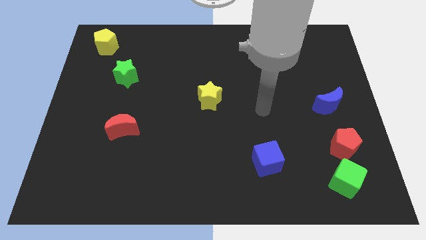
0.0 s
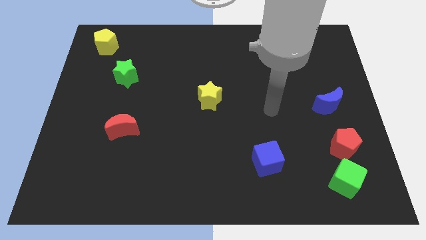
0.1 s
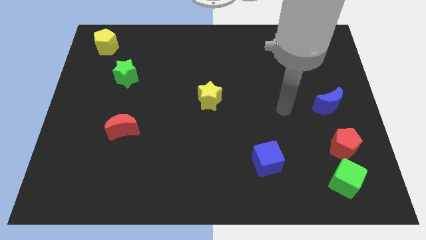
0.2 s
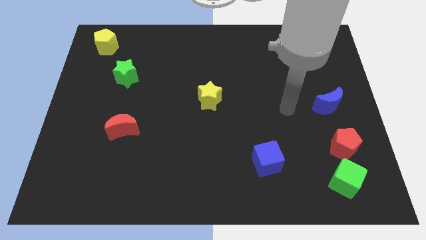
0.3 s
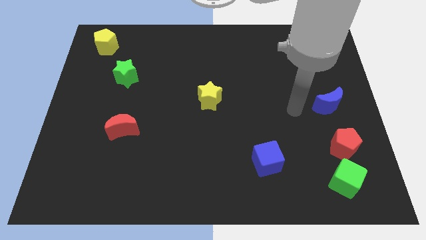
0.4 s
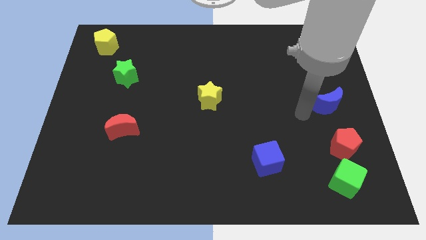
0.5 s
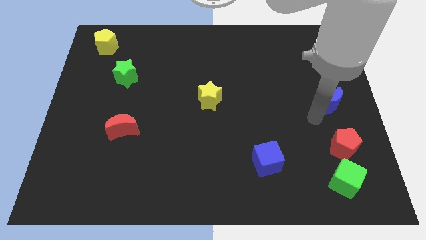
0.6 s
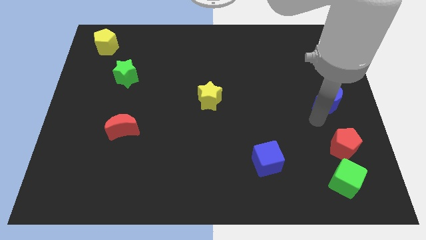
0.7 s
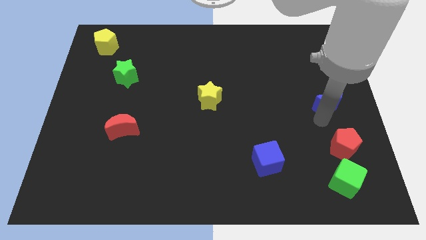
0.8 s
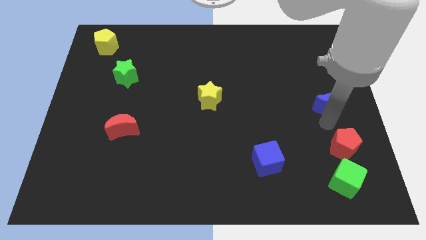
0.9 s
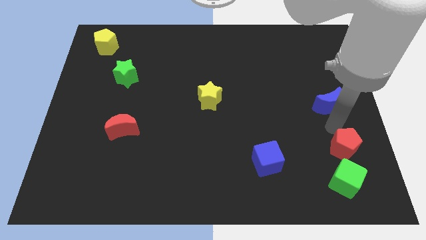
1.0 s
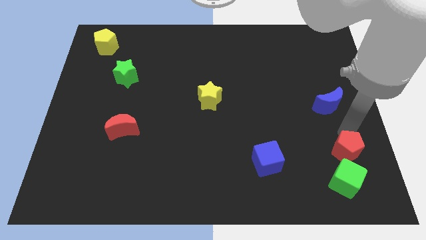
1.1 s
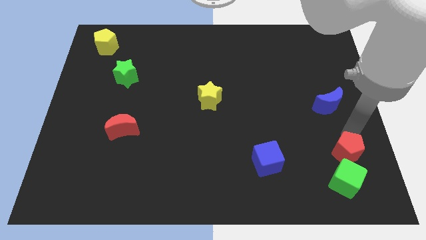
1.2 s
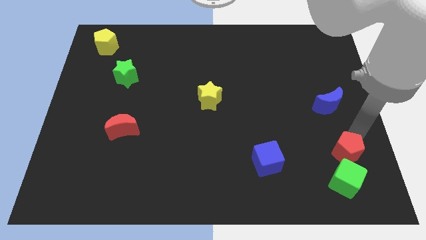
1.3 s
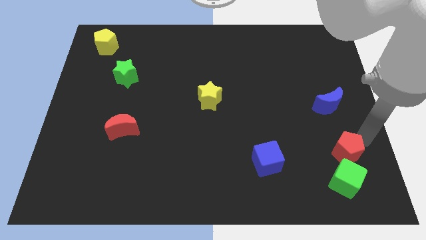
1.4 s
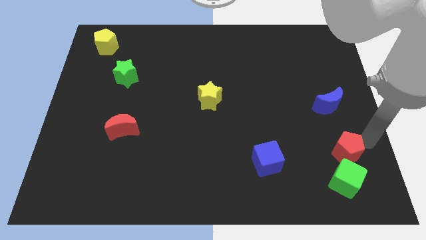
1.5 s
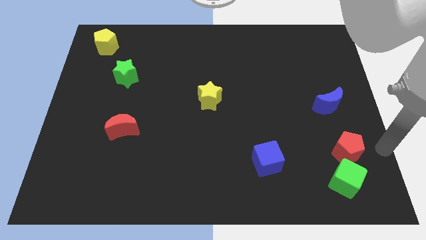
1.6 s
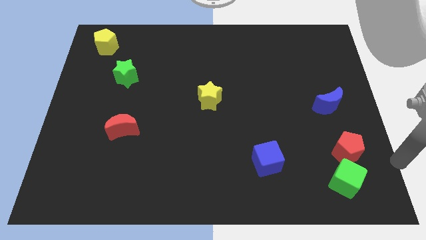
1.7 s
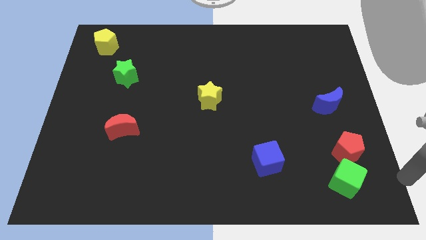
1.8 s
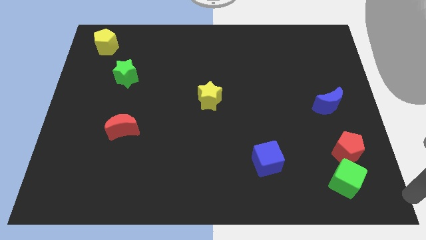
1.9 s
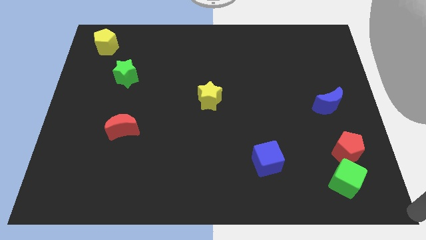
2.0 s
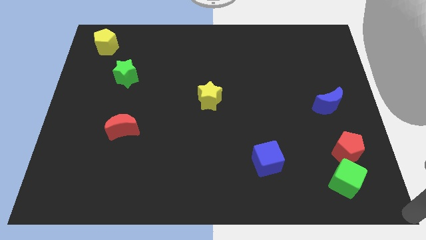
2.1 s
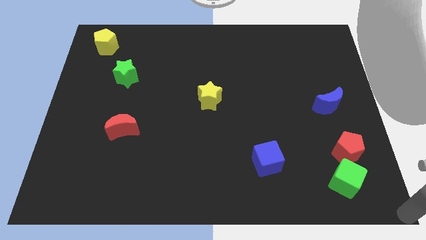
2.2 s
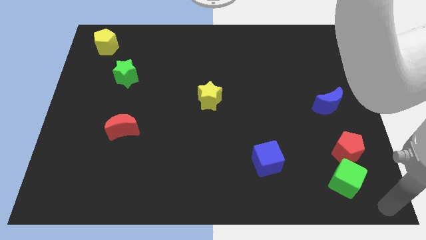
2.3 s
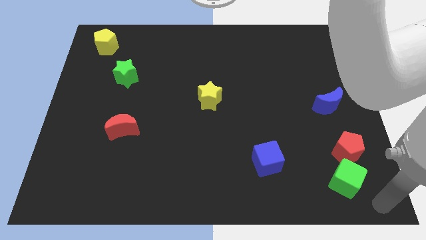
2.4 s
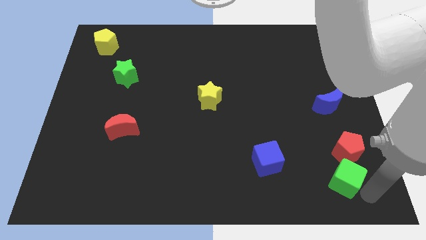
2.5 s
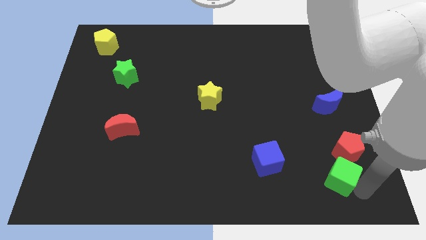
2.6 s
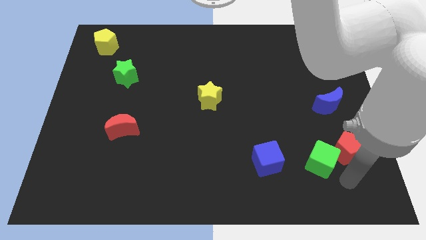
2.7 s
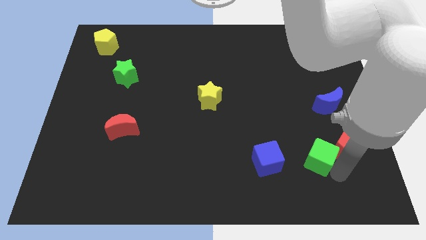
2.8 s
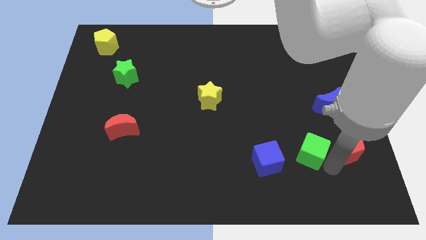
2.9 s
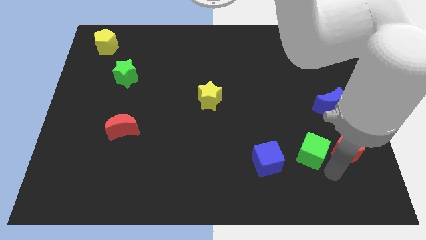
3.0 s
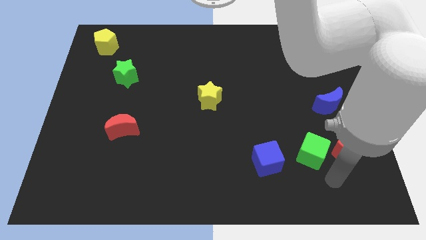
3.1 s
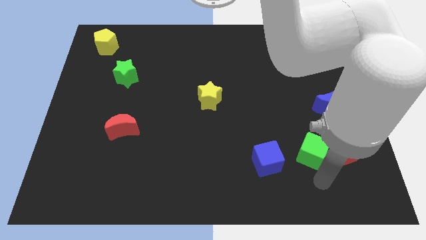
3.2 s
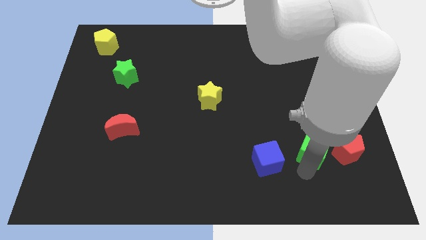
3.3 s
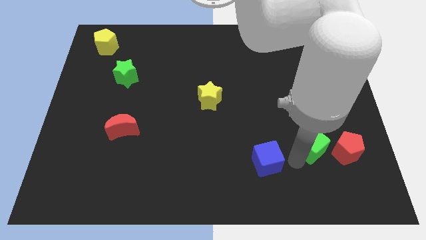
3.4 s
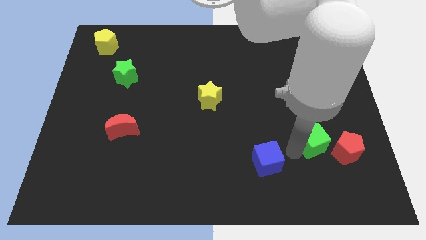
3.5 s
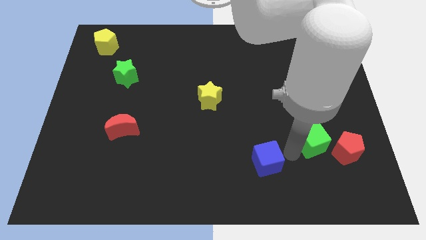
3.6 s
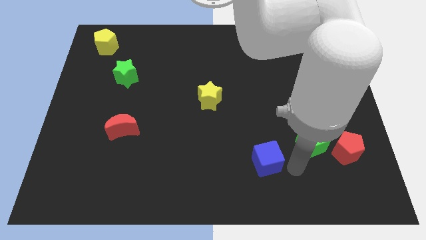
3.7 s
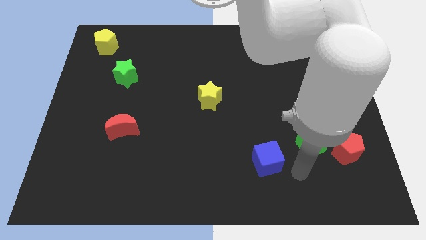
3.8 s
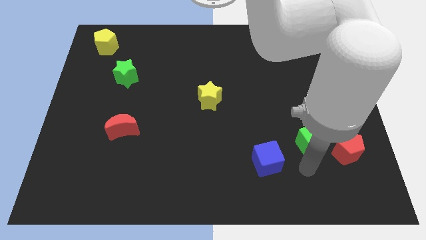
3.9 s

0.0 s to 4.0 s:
place the green cube towards the left of the red pentagon

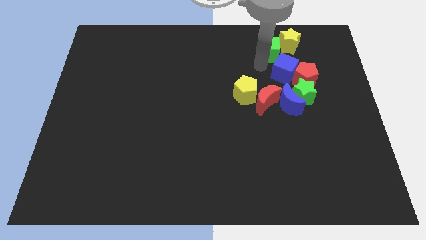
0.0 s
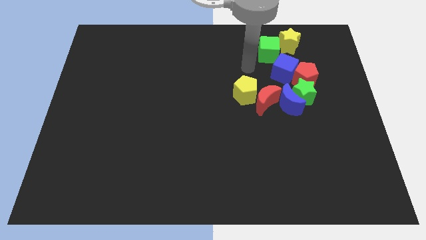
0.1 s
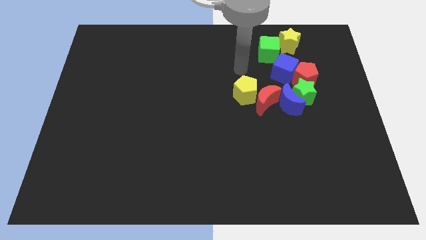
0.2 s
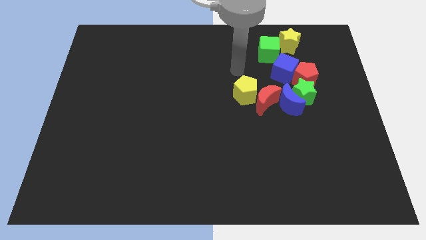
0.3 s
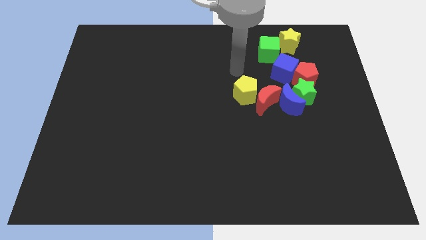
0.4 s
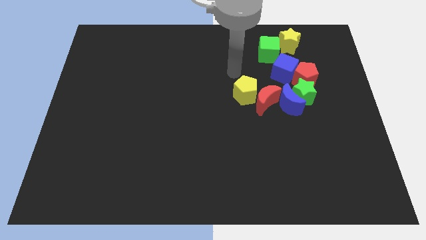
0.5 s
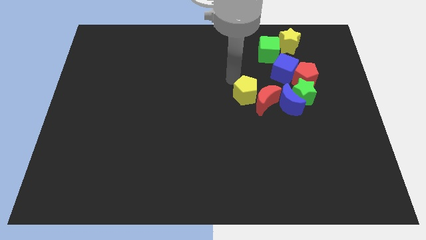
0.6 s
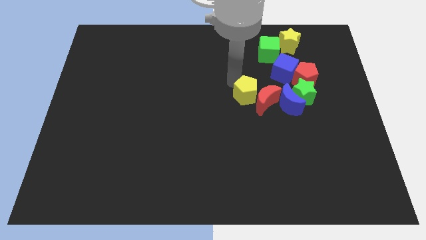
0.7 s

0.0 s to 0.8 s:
move the arm away from the blue cube

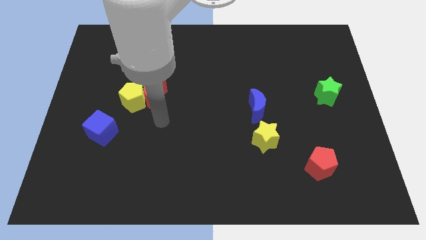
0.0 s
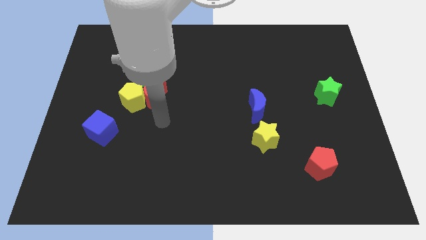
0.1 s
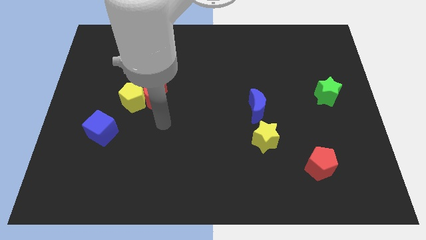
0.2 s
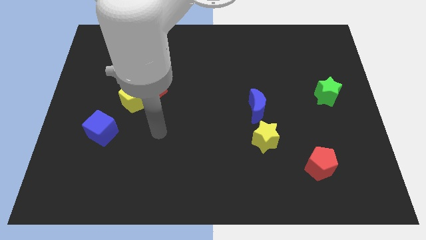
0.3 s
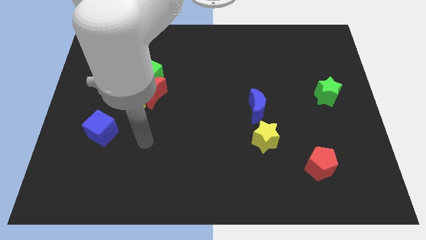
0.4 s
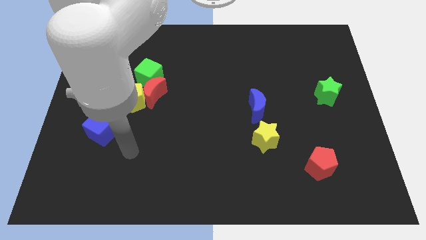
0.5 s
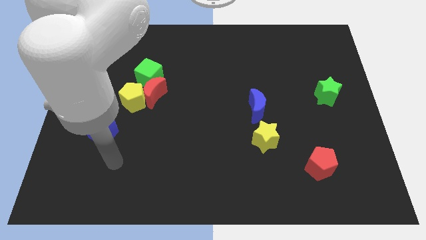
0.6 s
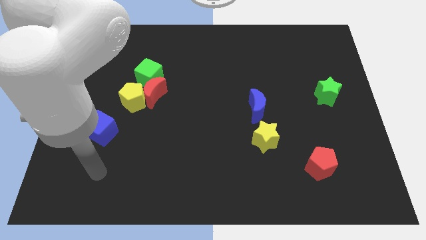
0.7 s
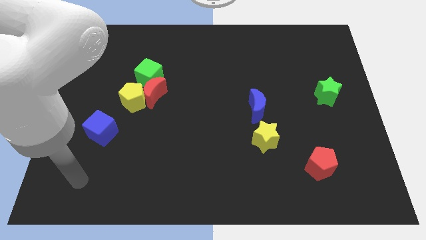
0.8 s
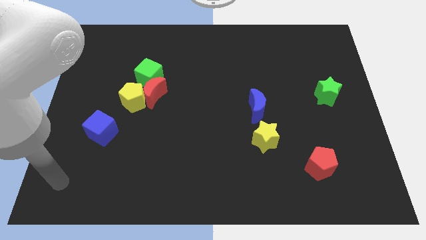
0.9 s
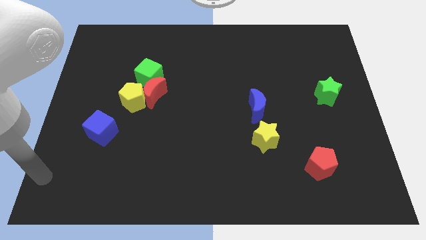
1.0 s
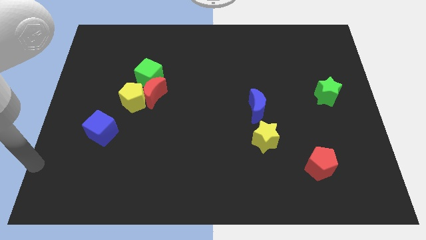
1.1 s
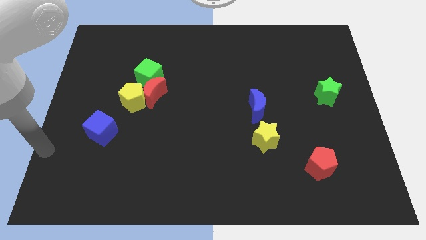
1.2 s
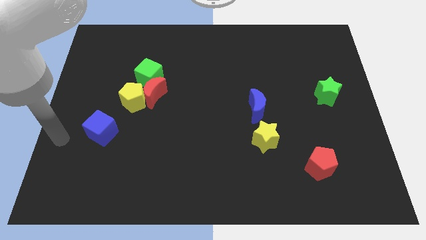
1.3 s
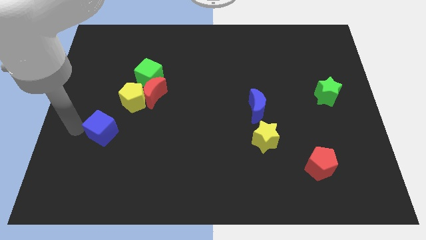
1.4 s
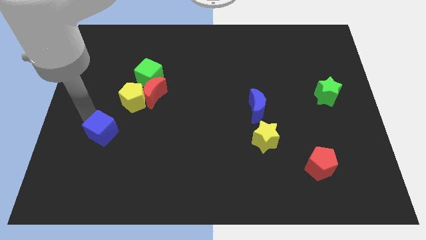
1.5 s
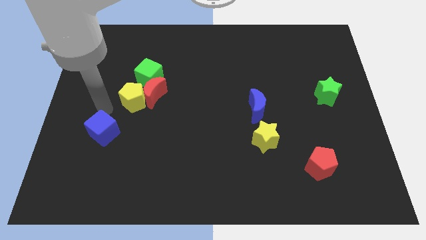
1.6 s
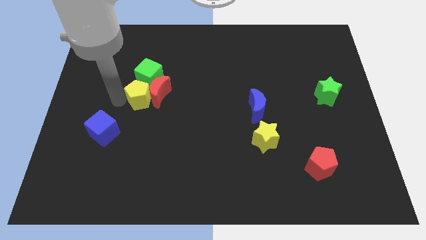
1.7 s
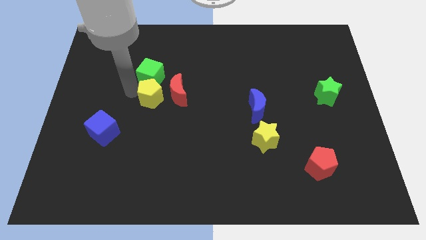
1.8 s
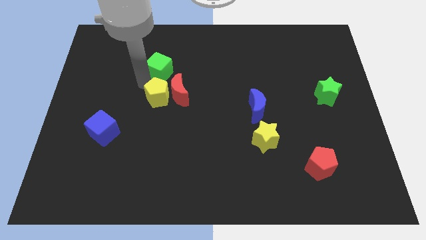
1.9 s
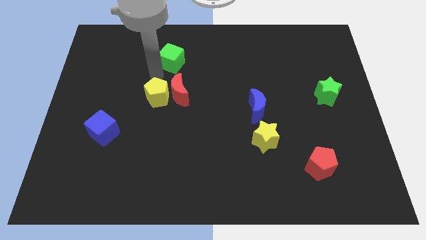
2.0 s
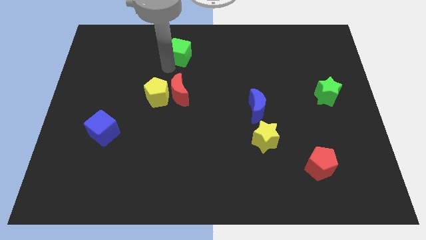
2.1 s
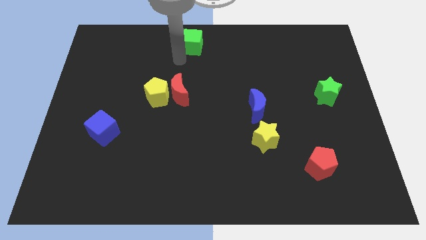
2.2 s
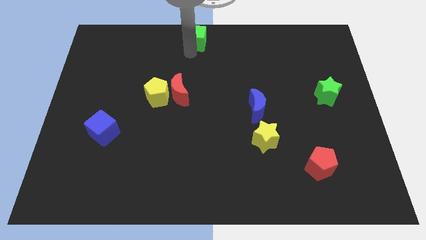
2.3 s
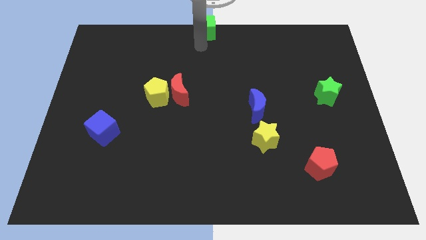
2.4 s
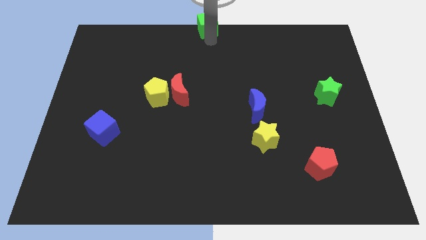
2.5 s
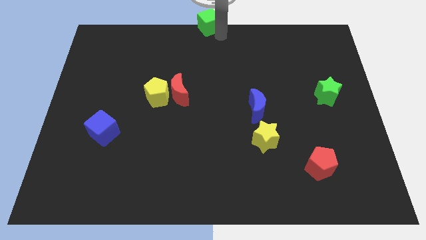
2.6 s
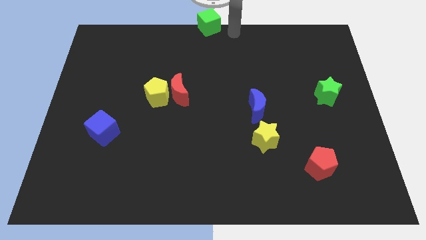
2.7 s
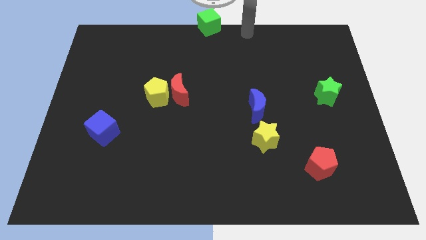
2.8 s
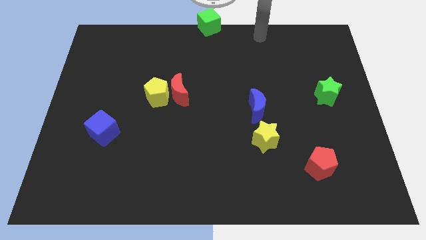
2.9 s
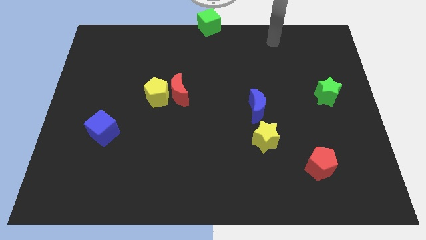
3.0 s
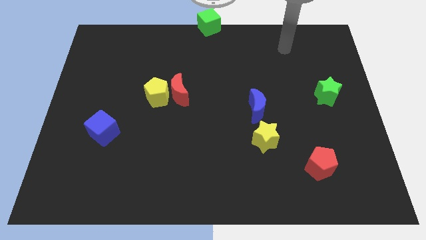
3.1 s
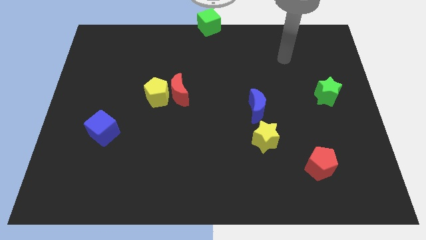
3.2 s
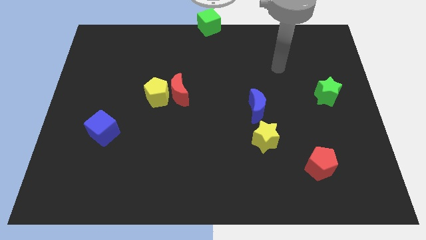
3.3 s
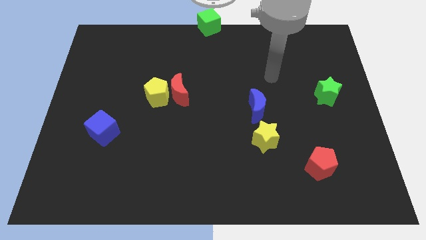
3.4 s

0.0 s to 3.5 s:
push the green cube to the top center of the board

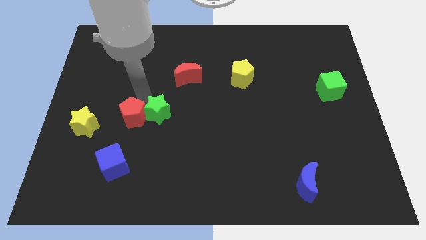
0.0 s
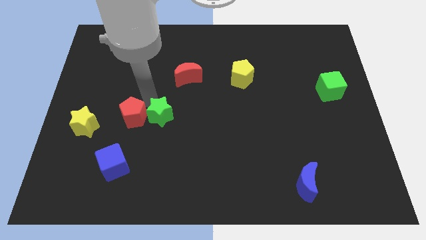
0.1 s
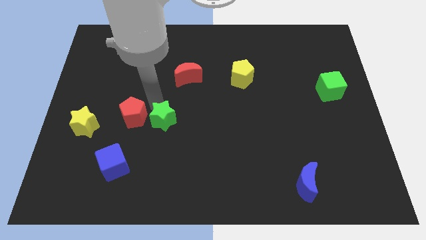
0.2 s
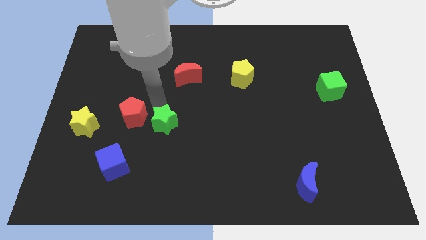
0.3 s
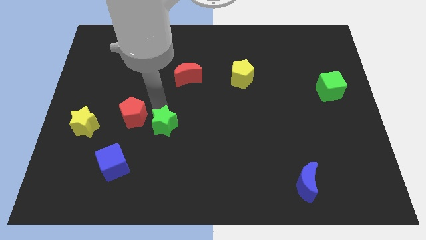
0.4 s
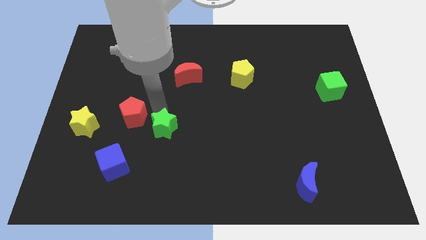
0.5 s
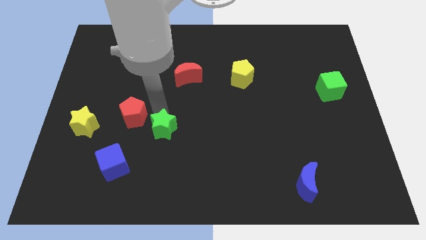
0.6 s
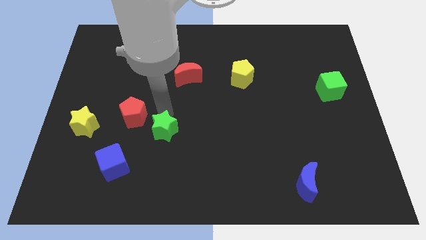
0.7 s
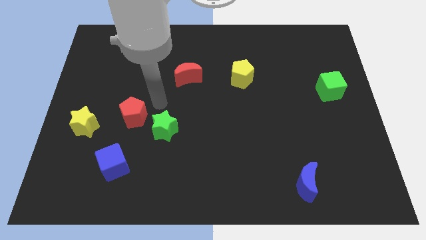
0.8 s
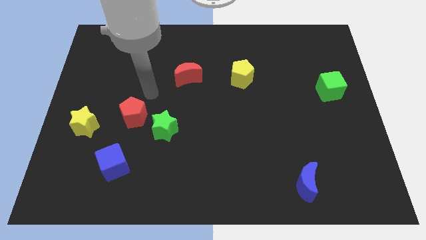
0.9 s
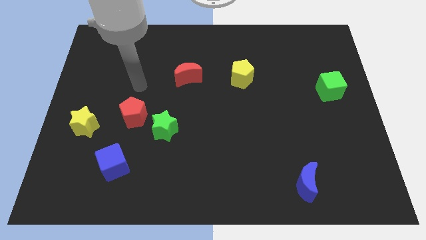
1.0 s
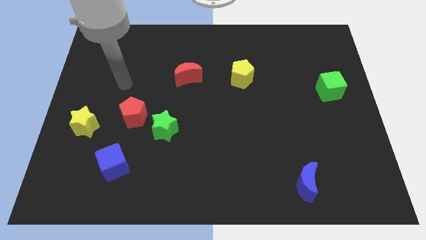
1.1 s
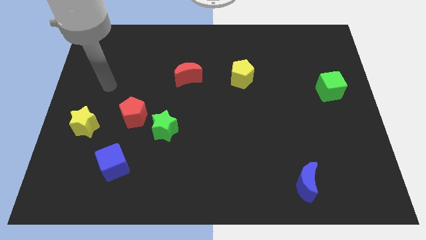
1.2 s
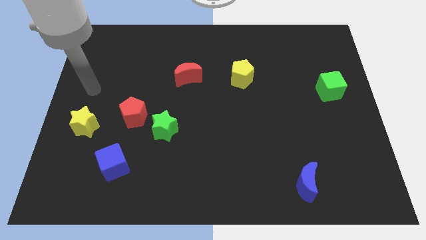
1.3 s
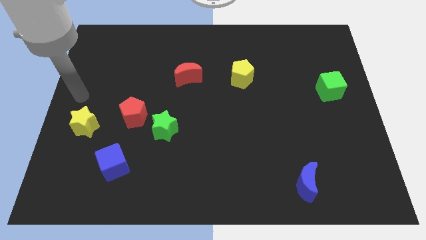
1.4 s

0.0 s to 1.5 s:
separate the green star from the red pentagon
